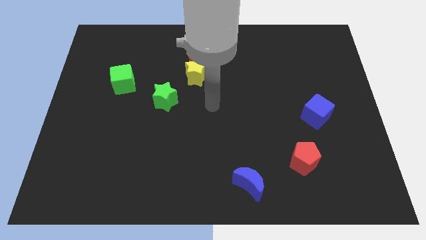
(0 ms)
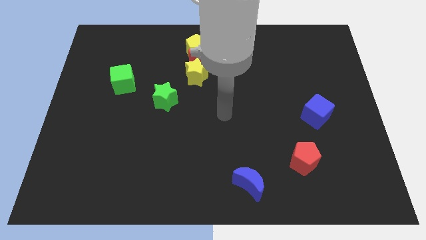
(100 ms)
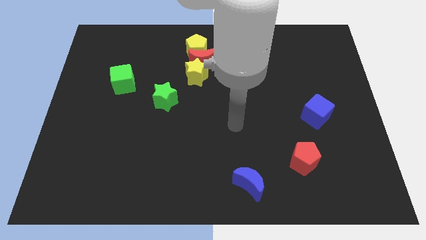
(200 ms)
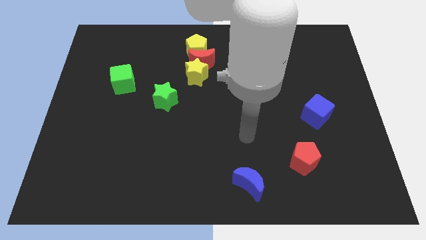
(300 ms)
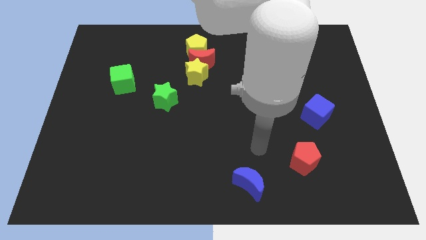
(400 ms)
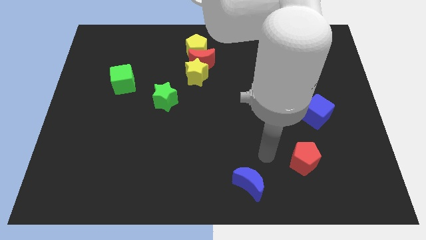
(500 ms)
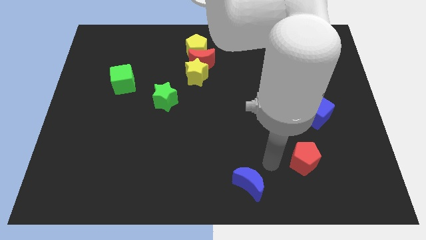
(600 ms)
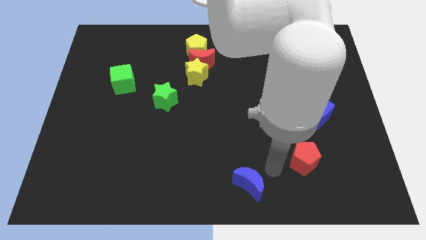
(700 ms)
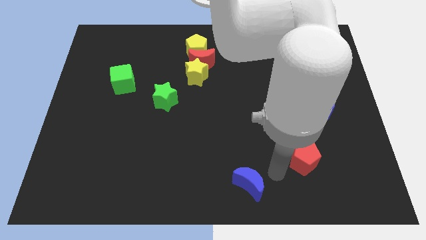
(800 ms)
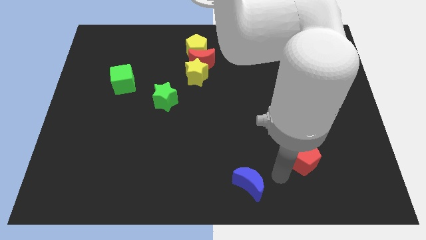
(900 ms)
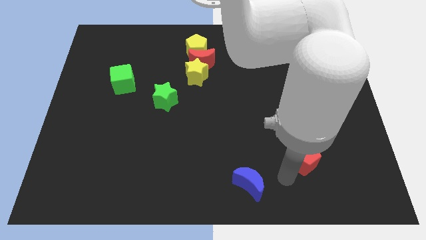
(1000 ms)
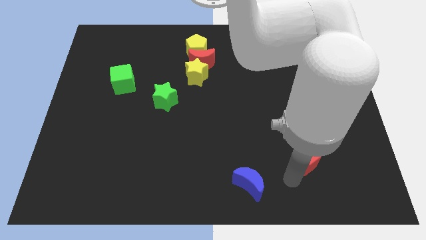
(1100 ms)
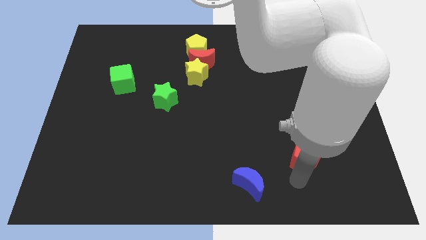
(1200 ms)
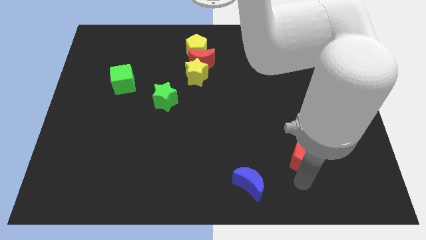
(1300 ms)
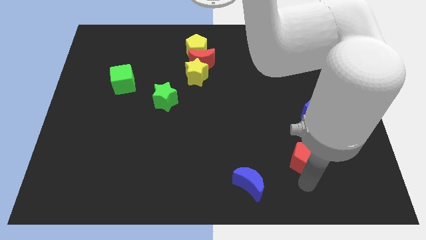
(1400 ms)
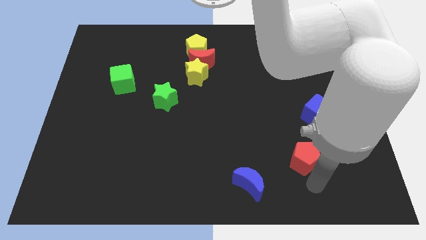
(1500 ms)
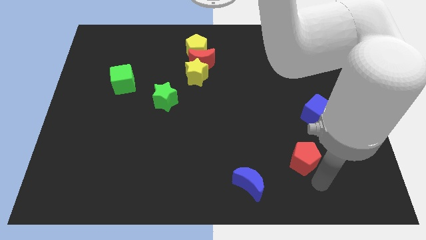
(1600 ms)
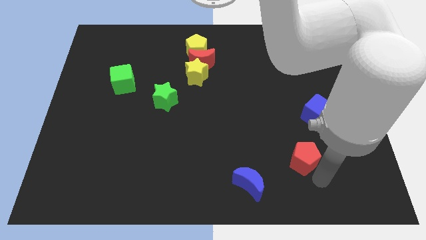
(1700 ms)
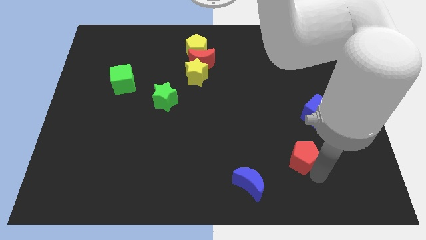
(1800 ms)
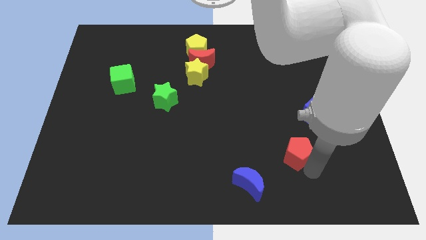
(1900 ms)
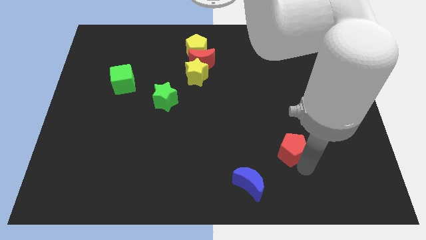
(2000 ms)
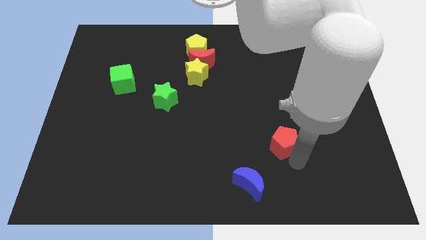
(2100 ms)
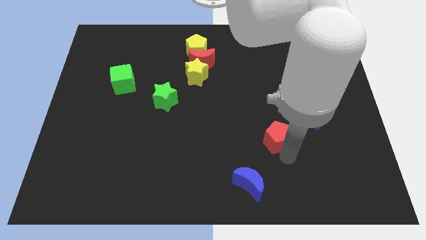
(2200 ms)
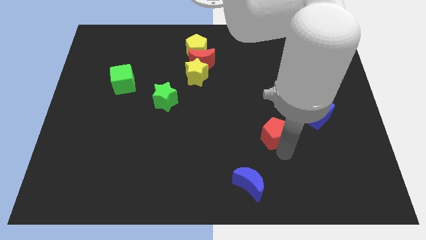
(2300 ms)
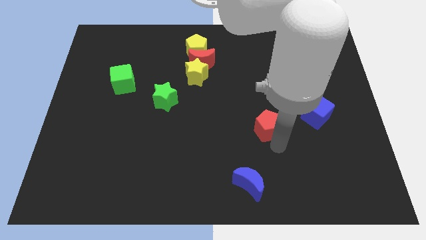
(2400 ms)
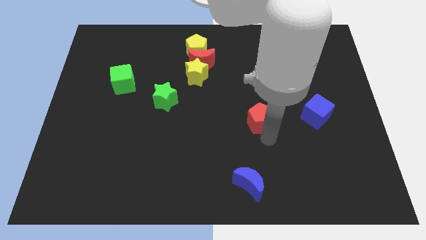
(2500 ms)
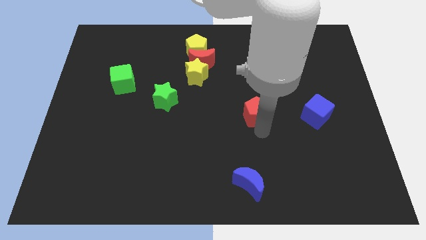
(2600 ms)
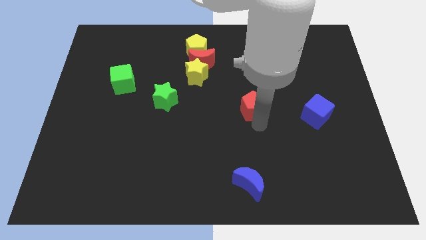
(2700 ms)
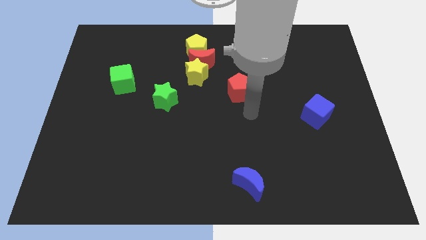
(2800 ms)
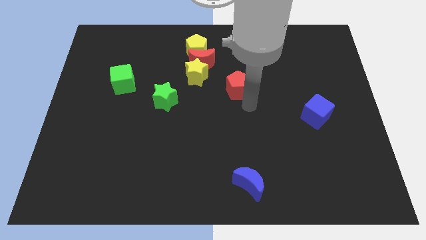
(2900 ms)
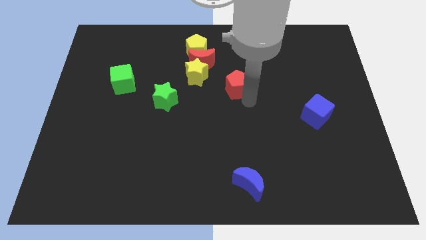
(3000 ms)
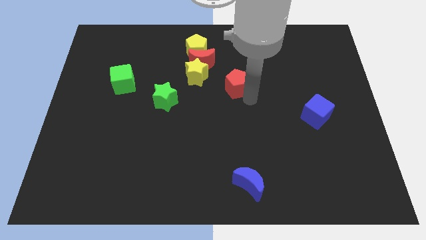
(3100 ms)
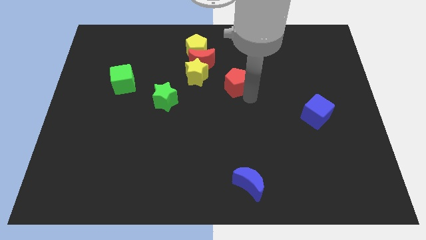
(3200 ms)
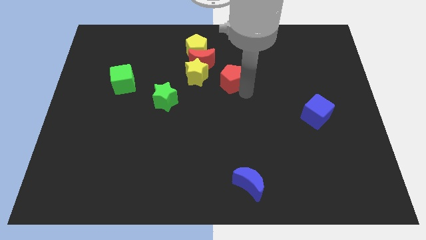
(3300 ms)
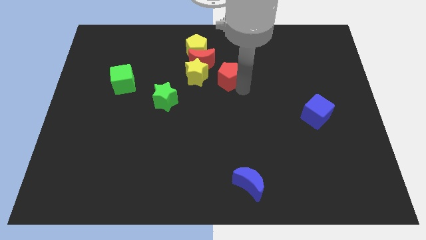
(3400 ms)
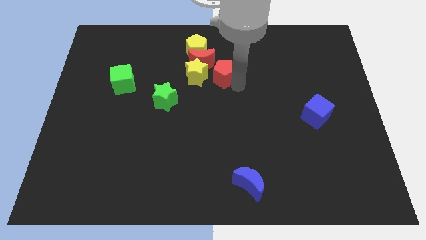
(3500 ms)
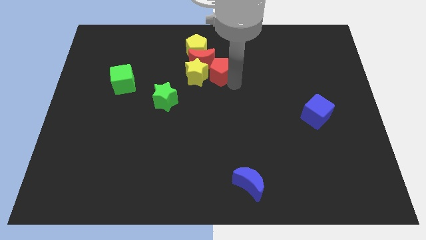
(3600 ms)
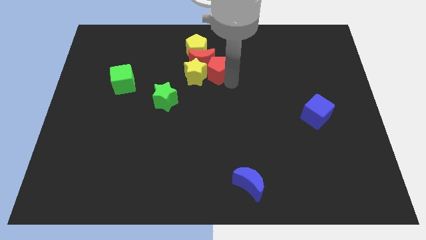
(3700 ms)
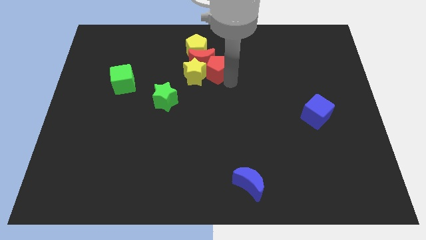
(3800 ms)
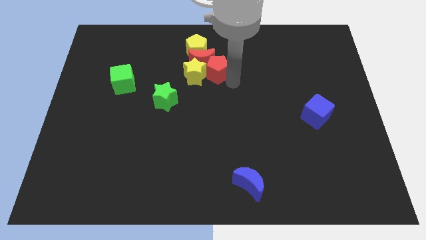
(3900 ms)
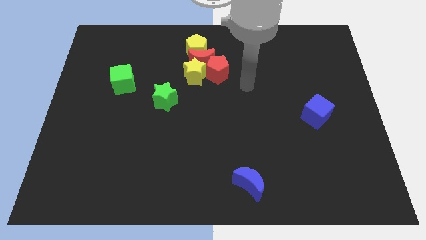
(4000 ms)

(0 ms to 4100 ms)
place the red pentagon right to the yellow star

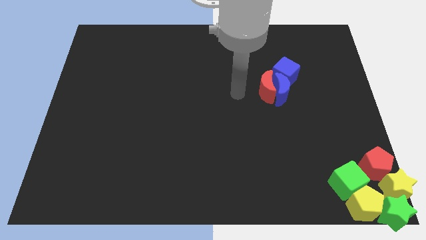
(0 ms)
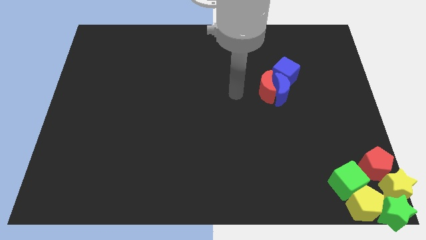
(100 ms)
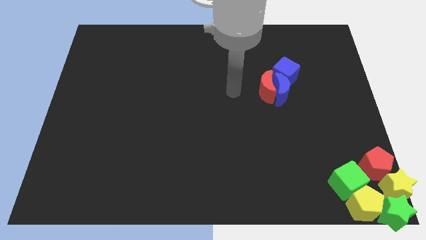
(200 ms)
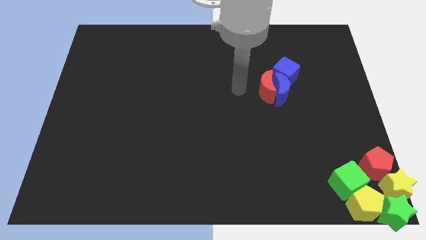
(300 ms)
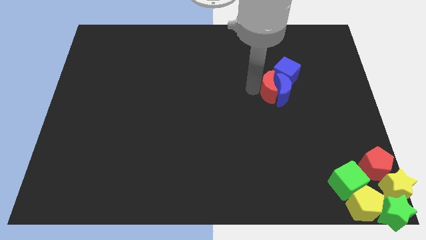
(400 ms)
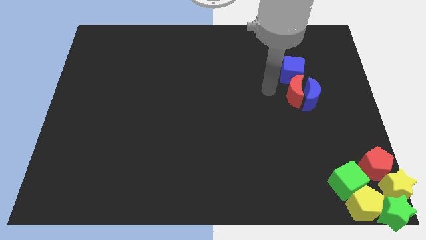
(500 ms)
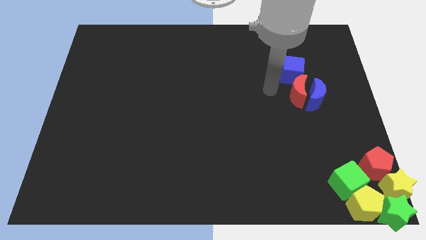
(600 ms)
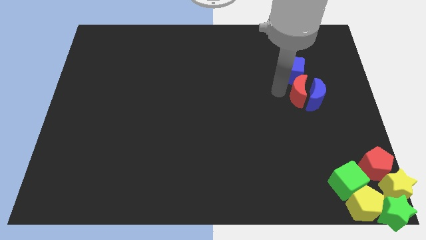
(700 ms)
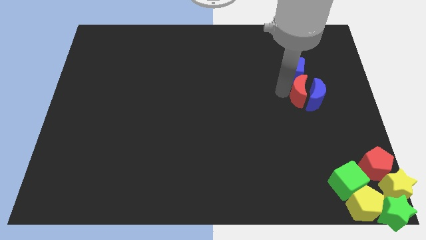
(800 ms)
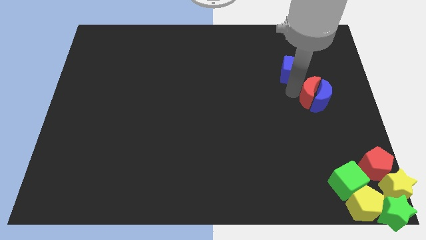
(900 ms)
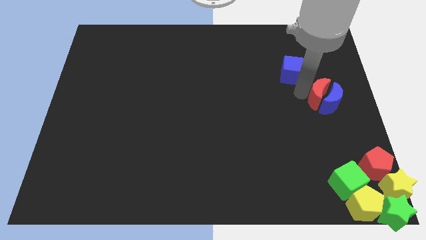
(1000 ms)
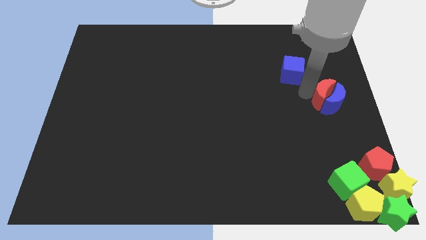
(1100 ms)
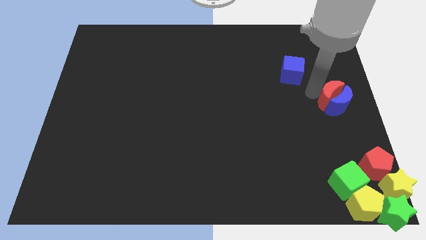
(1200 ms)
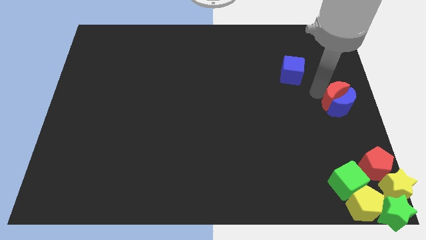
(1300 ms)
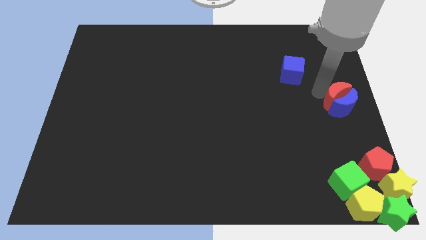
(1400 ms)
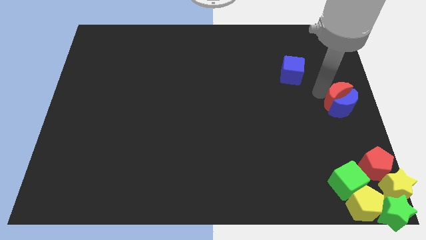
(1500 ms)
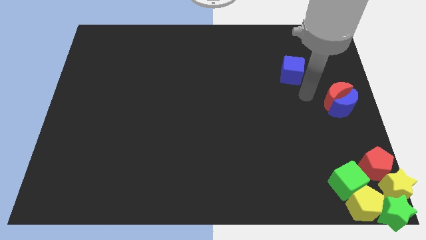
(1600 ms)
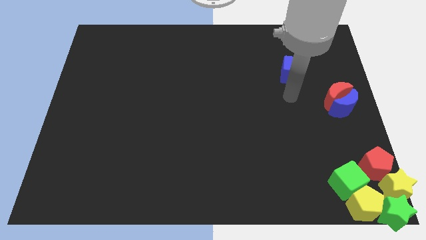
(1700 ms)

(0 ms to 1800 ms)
separate the red crescent and blue crescent from the blue cube

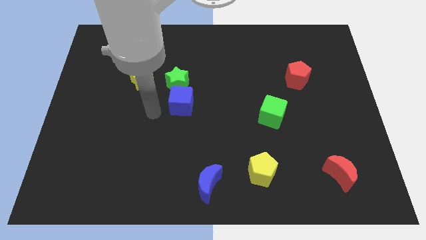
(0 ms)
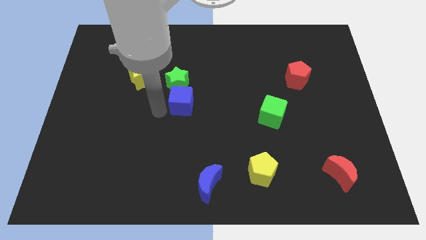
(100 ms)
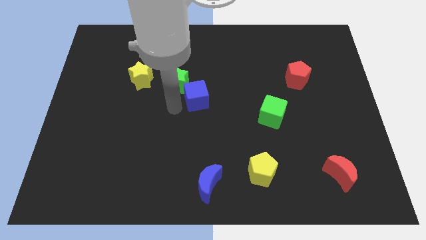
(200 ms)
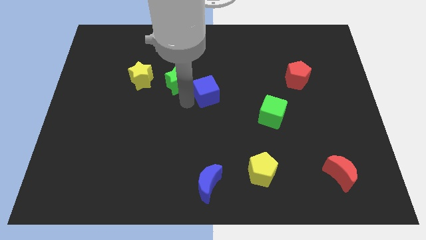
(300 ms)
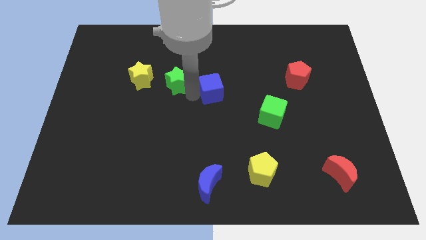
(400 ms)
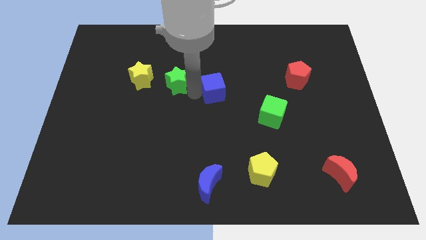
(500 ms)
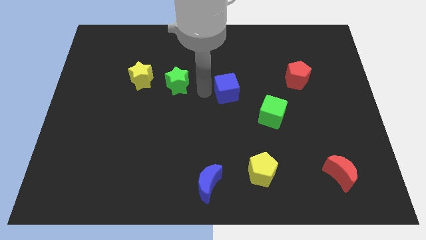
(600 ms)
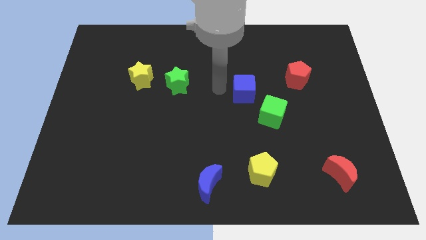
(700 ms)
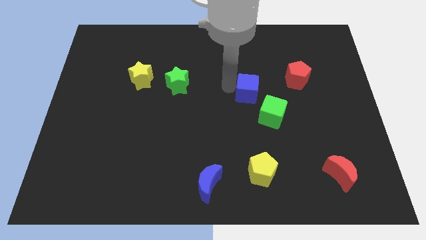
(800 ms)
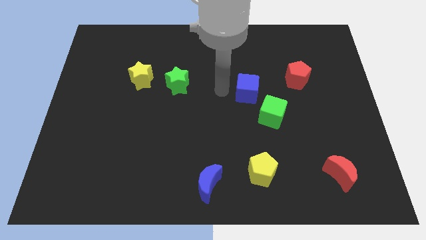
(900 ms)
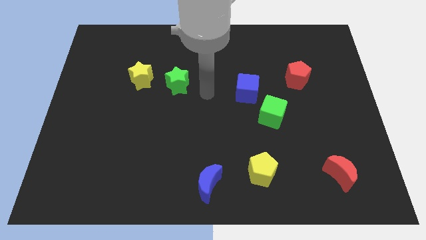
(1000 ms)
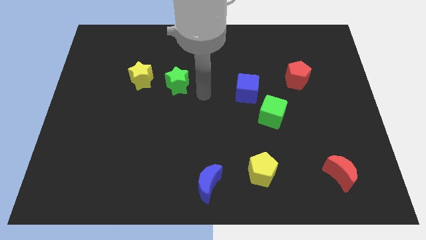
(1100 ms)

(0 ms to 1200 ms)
place blue cube to the right of green star

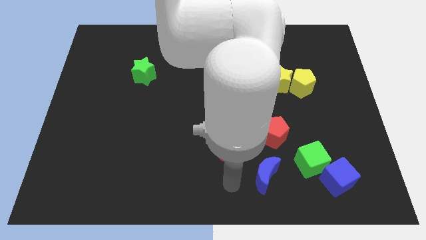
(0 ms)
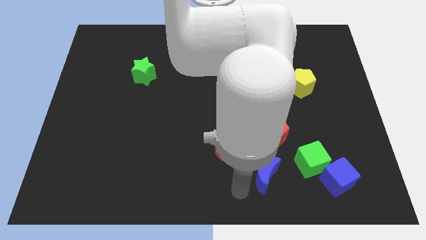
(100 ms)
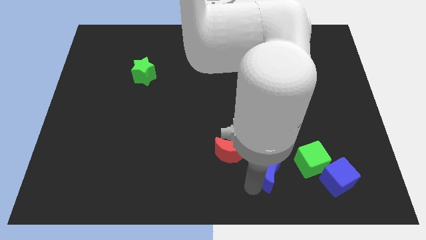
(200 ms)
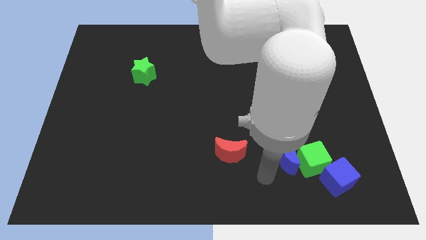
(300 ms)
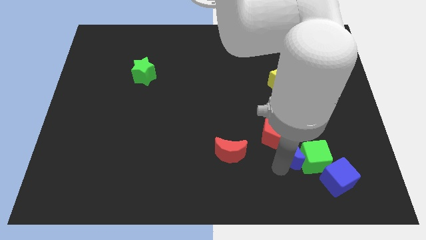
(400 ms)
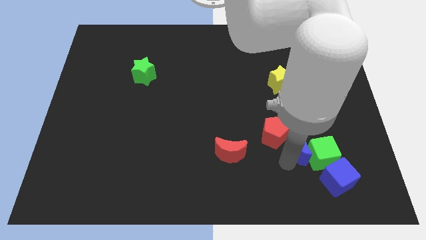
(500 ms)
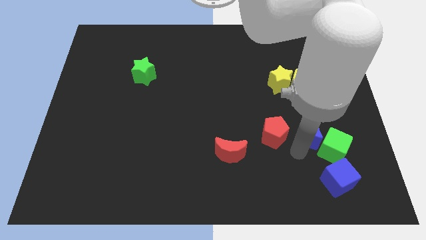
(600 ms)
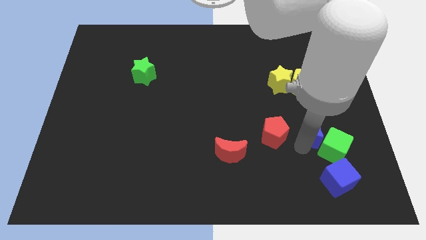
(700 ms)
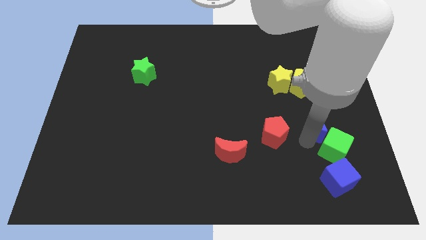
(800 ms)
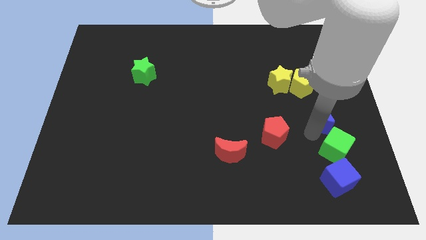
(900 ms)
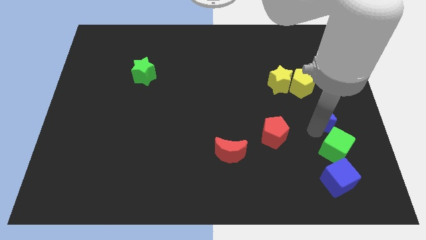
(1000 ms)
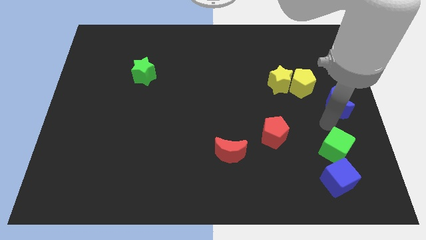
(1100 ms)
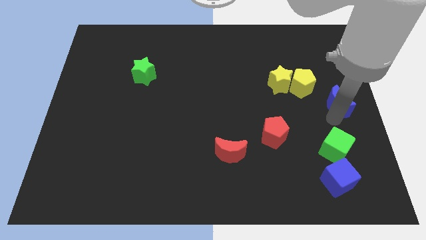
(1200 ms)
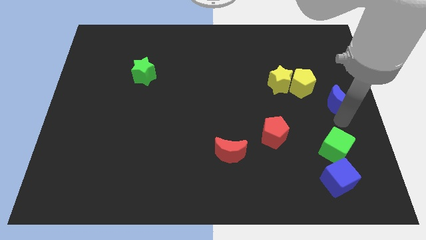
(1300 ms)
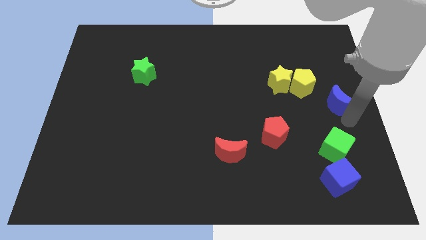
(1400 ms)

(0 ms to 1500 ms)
place the blue crescent to the right center of the board

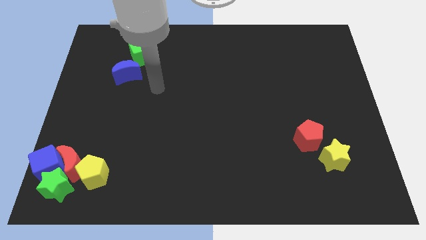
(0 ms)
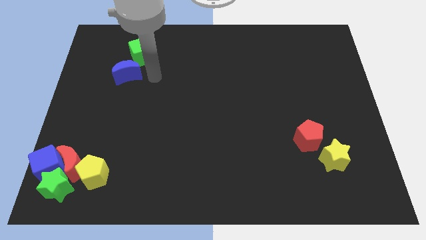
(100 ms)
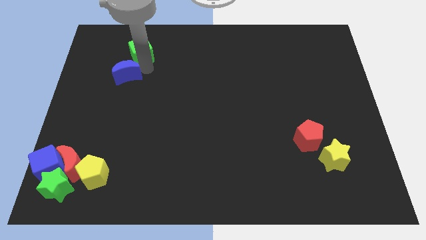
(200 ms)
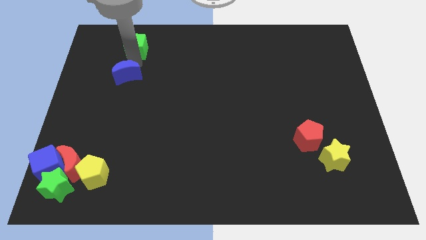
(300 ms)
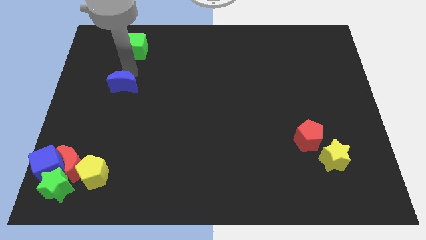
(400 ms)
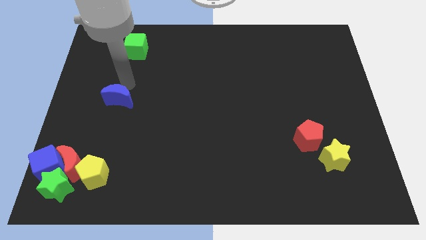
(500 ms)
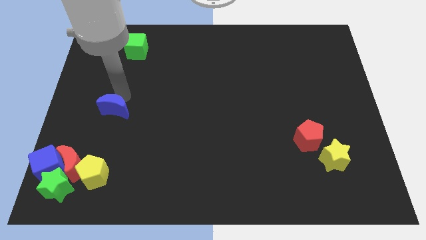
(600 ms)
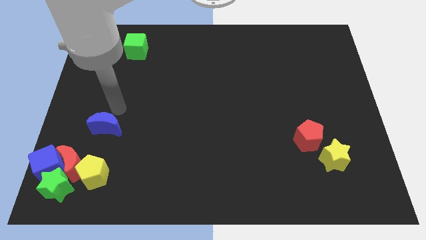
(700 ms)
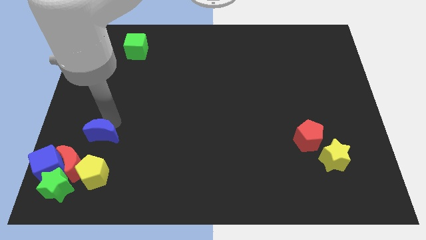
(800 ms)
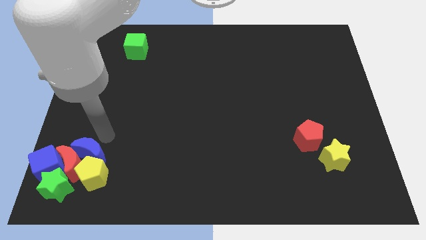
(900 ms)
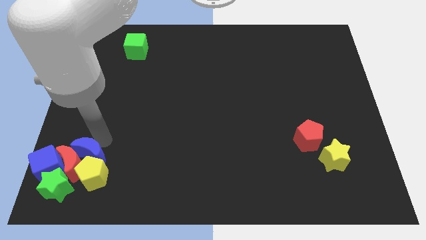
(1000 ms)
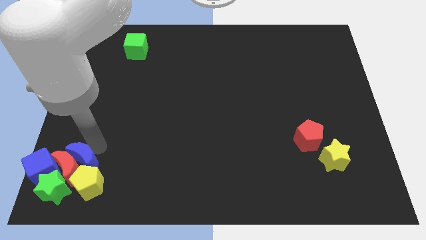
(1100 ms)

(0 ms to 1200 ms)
push the blue moon into the red moon
